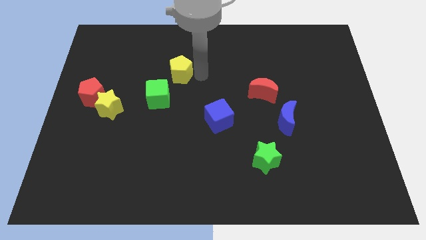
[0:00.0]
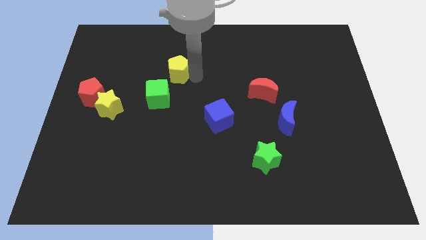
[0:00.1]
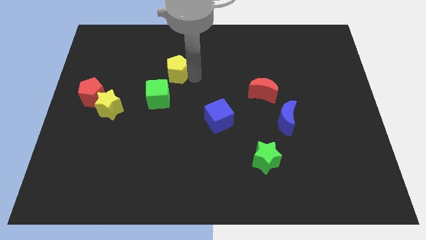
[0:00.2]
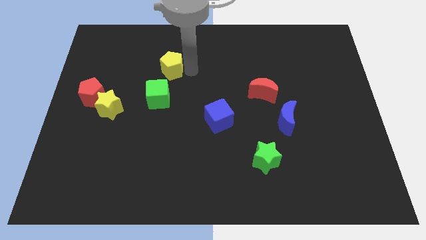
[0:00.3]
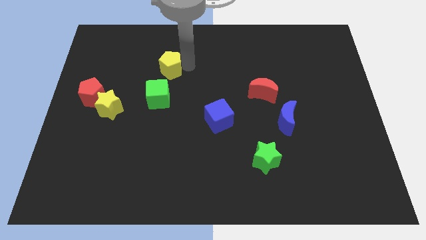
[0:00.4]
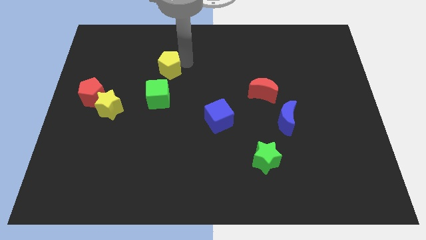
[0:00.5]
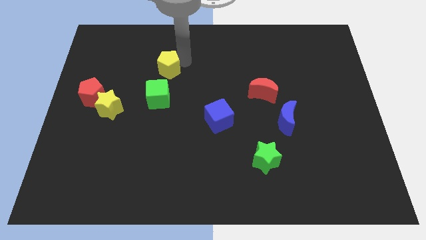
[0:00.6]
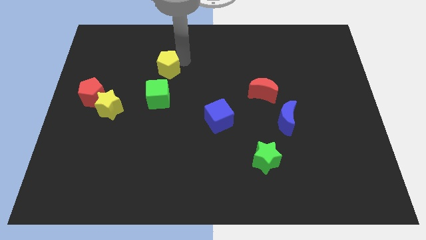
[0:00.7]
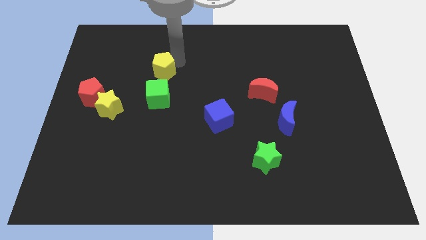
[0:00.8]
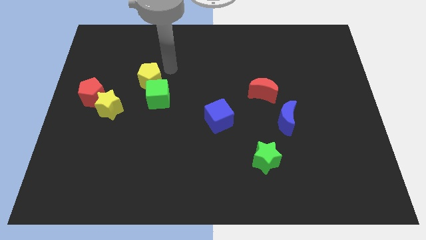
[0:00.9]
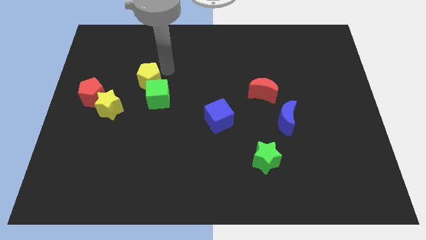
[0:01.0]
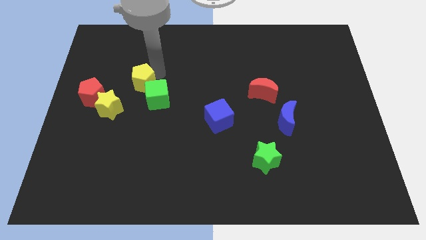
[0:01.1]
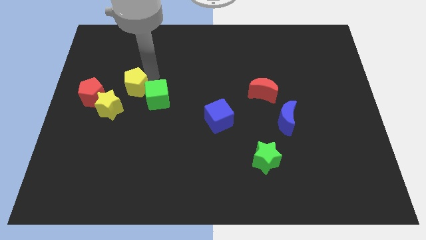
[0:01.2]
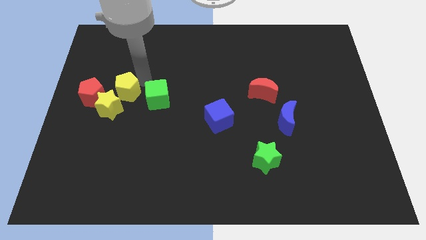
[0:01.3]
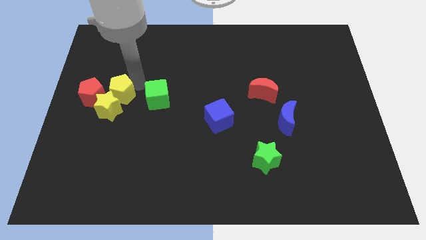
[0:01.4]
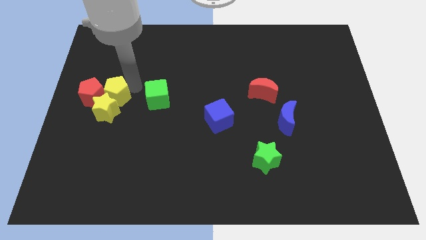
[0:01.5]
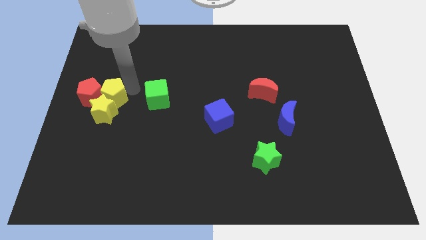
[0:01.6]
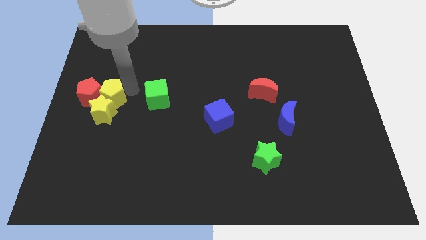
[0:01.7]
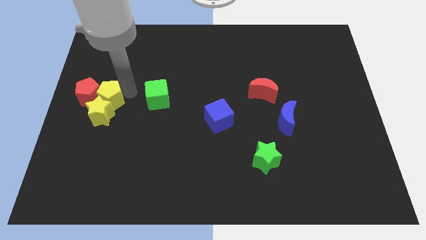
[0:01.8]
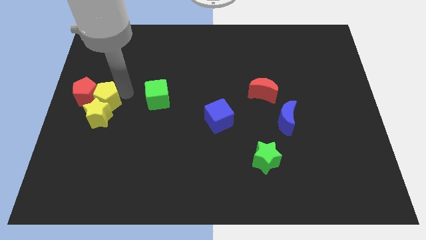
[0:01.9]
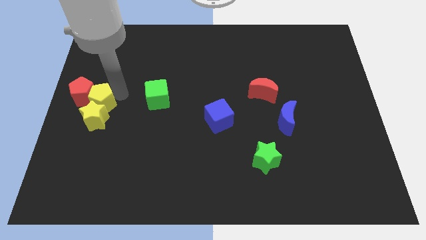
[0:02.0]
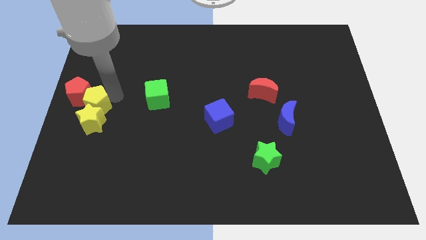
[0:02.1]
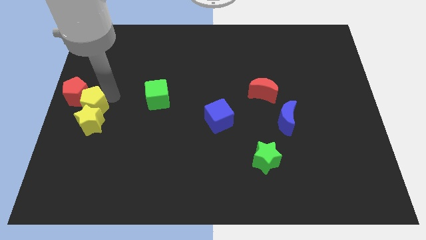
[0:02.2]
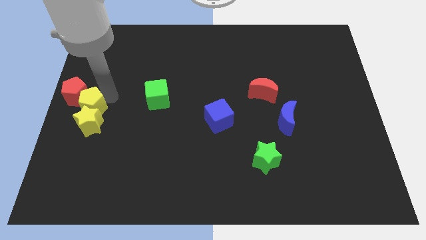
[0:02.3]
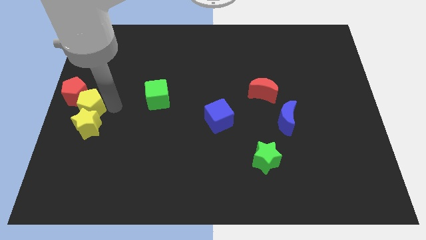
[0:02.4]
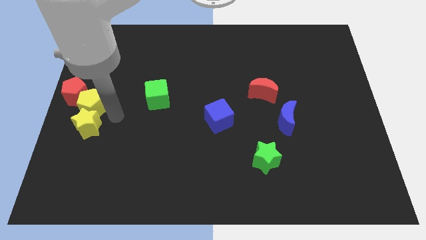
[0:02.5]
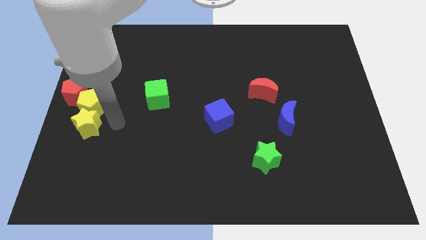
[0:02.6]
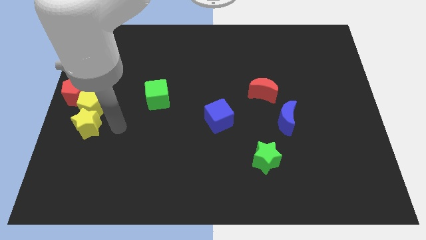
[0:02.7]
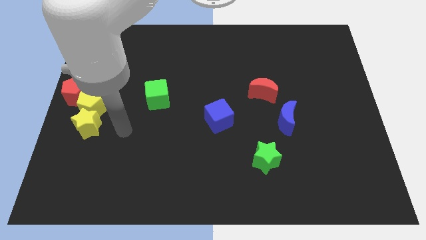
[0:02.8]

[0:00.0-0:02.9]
push the yellow pentagon into the top of the yellow star

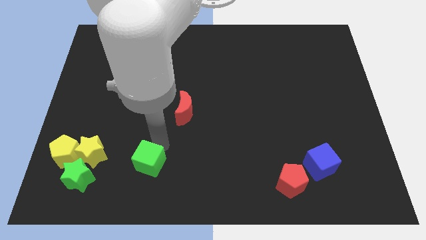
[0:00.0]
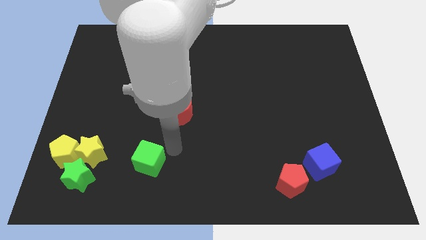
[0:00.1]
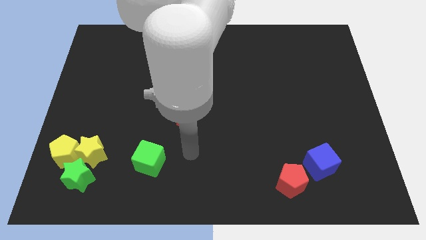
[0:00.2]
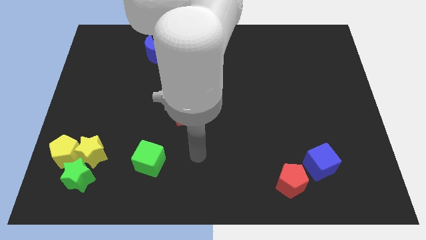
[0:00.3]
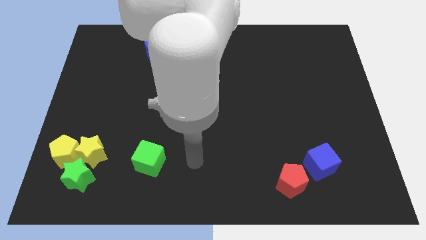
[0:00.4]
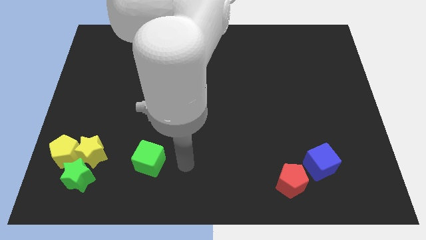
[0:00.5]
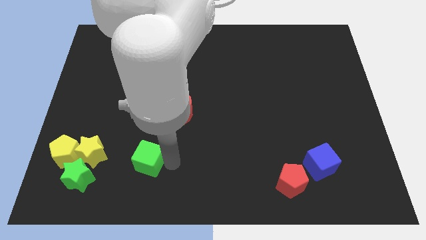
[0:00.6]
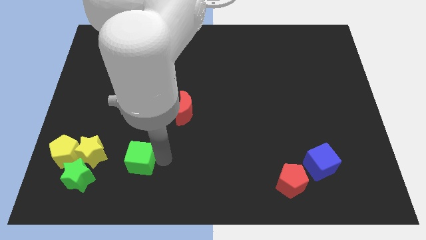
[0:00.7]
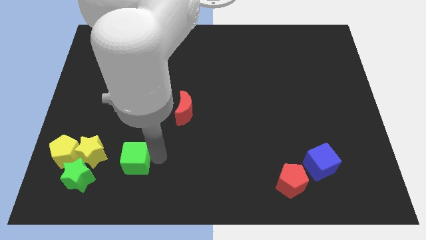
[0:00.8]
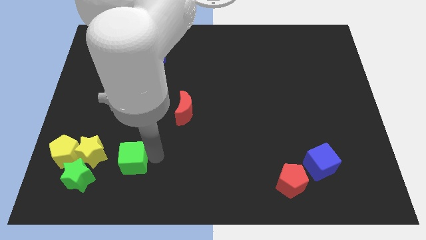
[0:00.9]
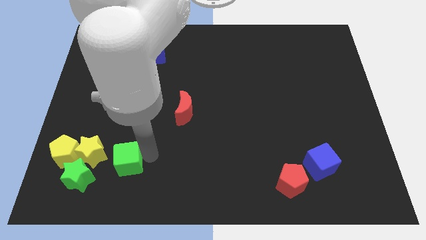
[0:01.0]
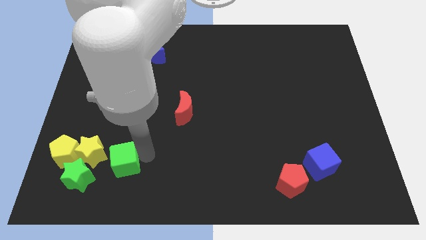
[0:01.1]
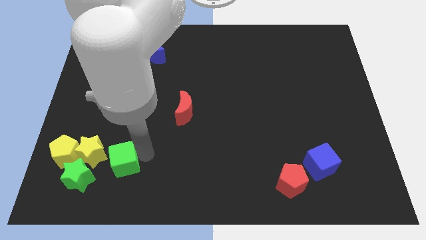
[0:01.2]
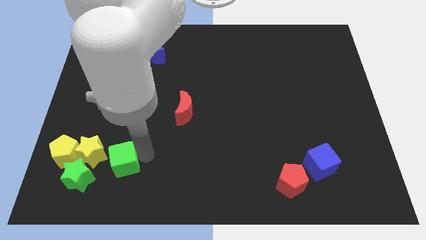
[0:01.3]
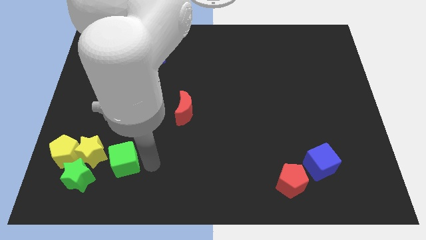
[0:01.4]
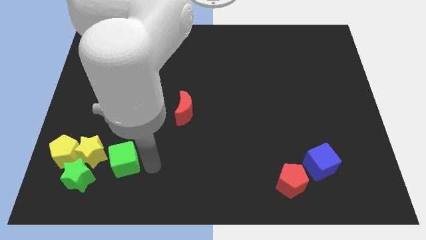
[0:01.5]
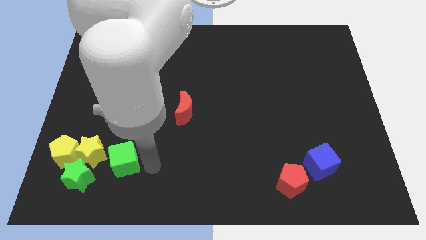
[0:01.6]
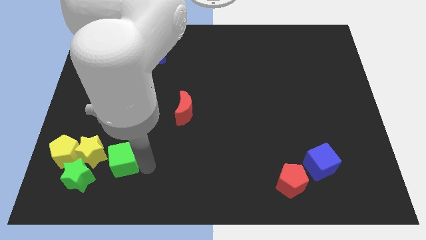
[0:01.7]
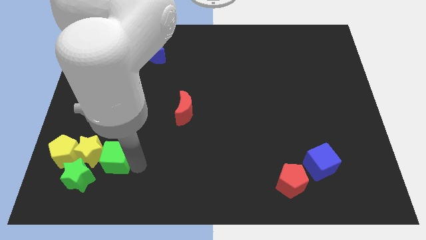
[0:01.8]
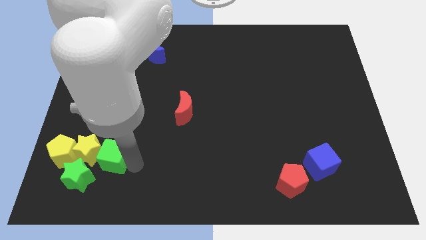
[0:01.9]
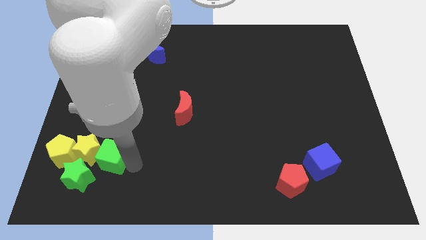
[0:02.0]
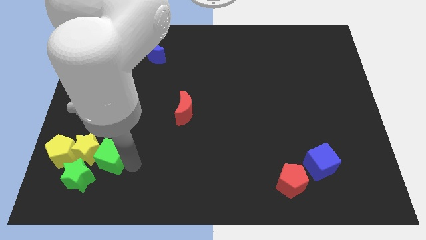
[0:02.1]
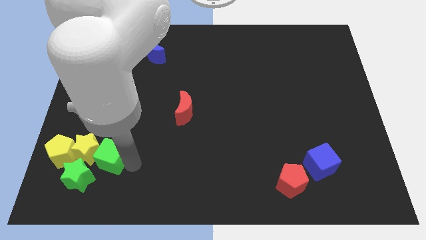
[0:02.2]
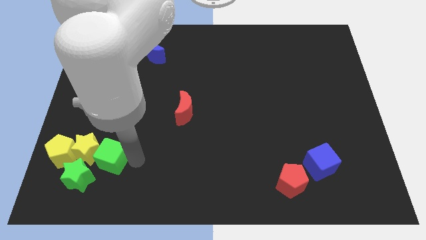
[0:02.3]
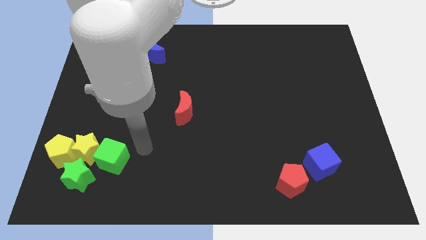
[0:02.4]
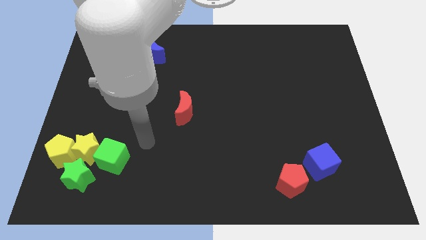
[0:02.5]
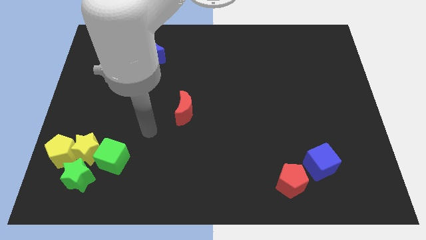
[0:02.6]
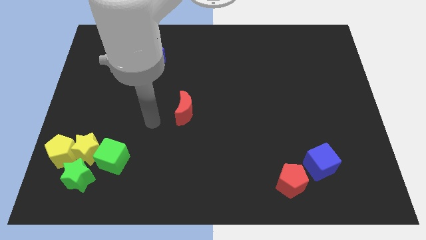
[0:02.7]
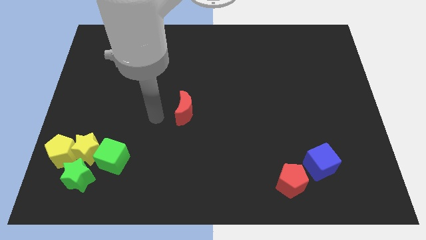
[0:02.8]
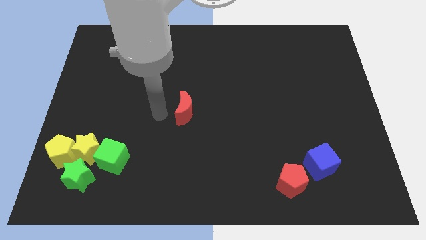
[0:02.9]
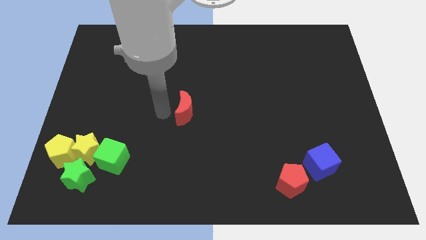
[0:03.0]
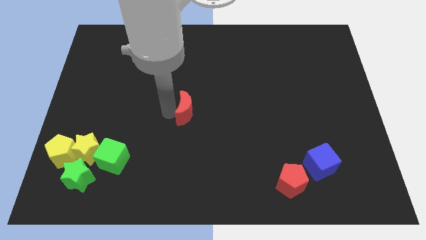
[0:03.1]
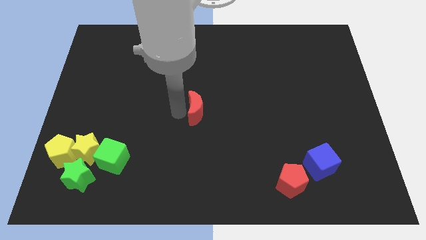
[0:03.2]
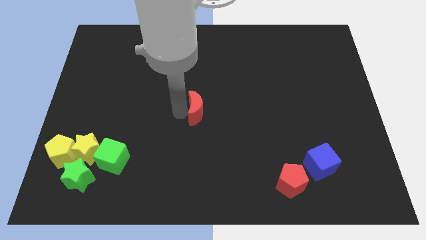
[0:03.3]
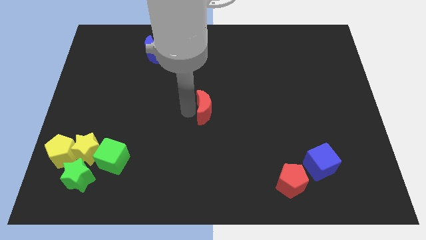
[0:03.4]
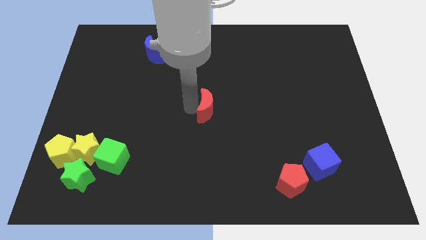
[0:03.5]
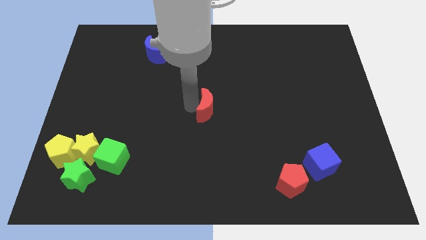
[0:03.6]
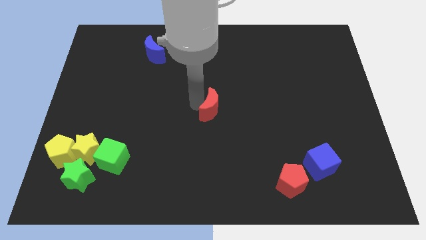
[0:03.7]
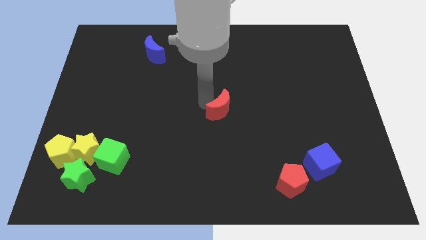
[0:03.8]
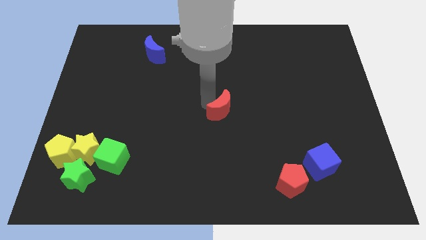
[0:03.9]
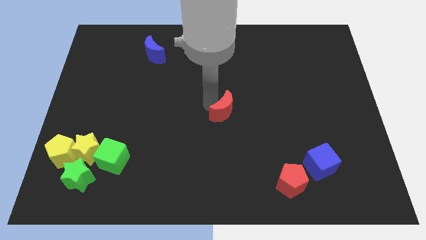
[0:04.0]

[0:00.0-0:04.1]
push the green cube into the yellow star

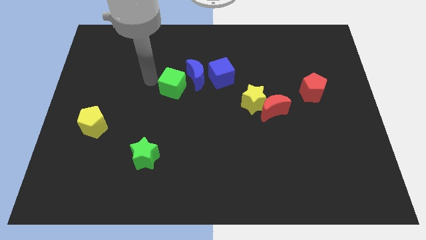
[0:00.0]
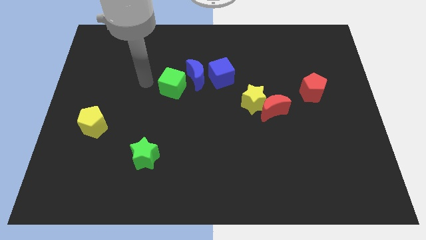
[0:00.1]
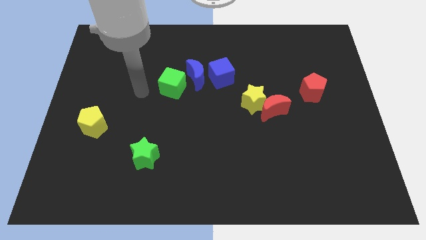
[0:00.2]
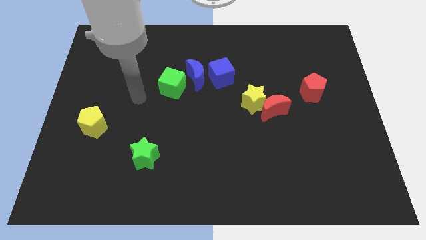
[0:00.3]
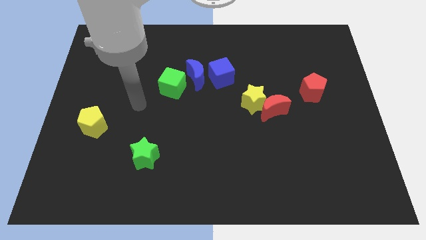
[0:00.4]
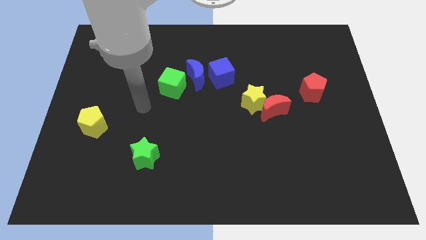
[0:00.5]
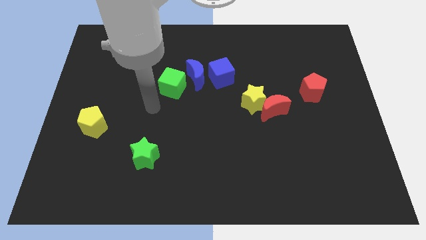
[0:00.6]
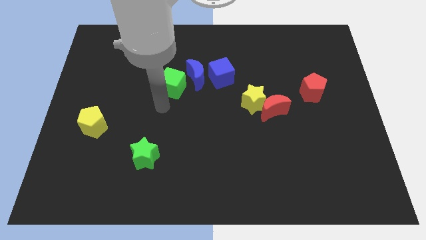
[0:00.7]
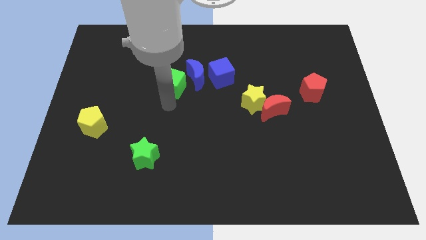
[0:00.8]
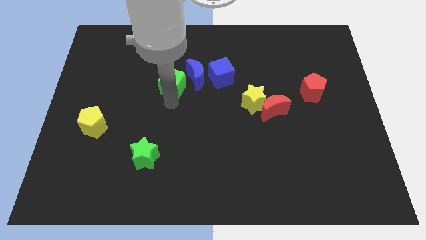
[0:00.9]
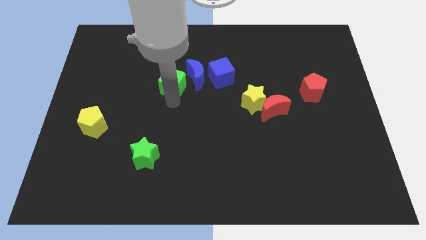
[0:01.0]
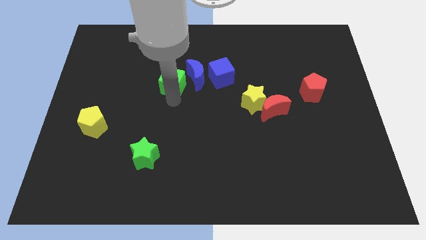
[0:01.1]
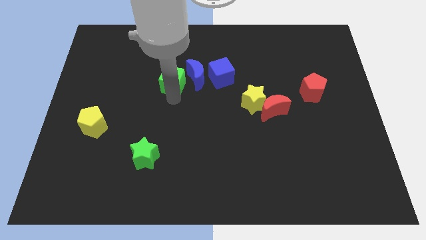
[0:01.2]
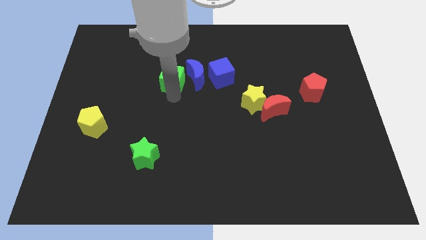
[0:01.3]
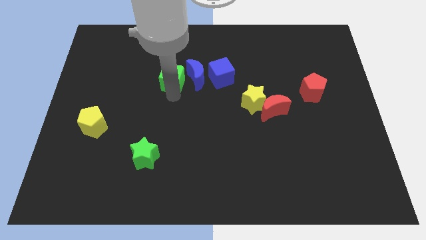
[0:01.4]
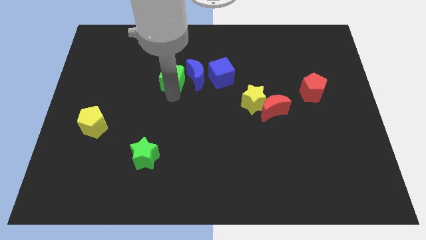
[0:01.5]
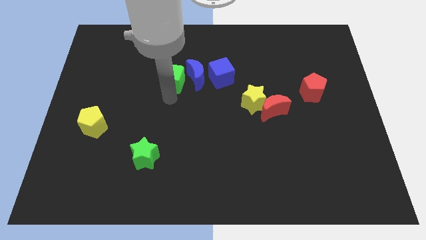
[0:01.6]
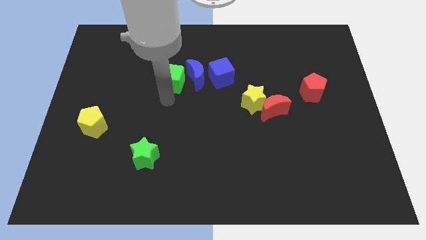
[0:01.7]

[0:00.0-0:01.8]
push the green cube upwards slightly

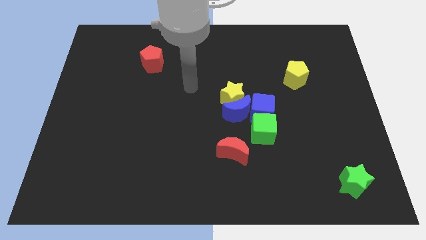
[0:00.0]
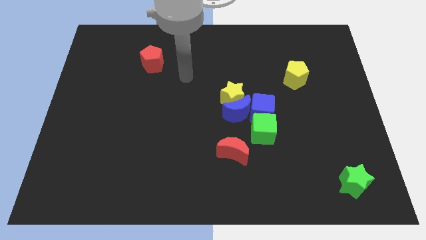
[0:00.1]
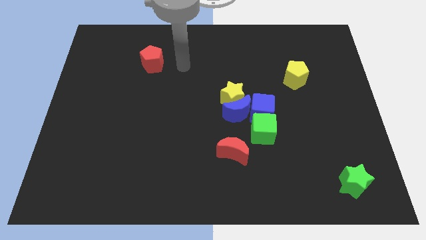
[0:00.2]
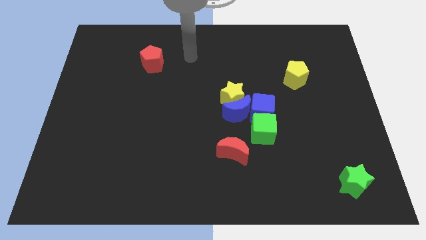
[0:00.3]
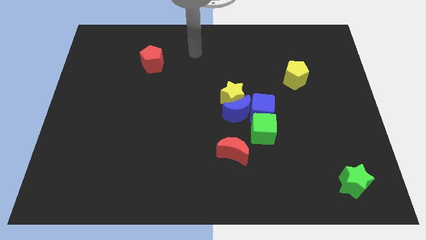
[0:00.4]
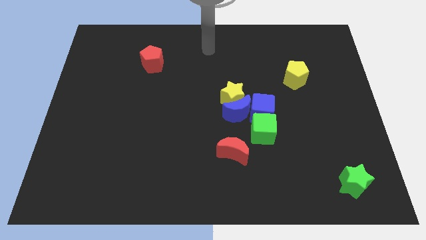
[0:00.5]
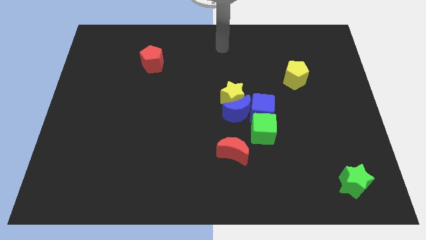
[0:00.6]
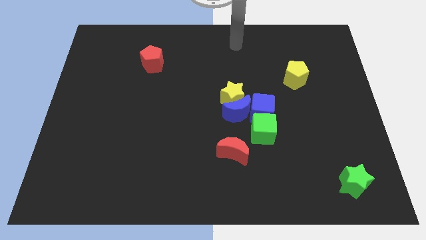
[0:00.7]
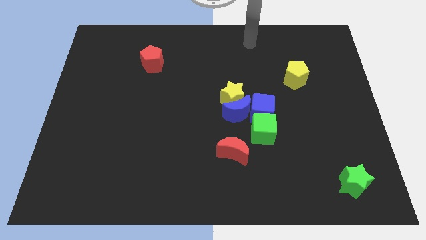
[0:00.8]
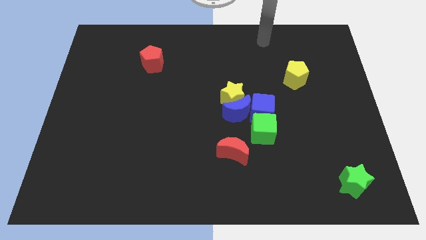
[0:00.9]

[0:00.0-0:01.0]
move arm upwards
